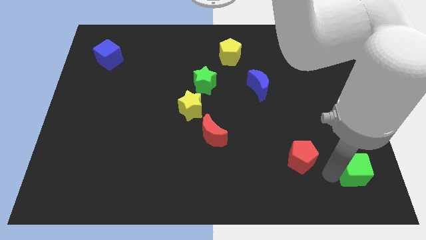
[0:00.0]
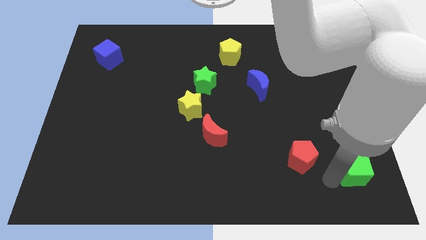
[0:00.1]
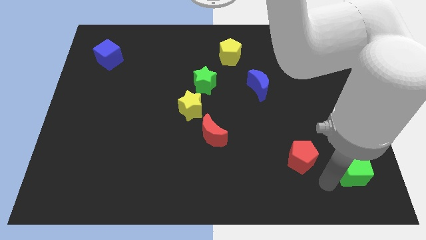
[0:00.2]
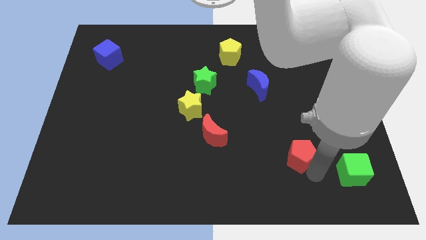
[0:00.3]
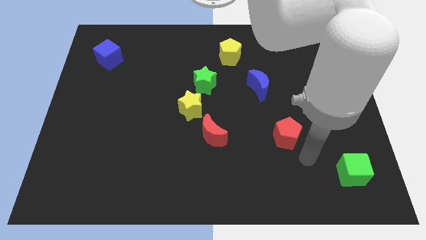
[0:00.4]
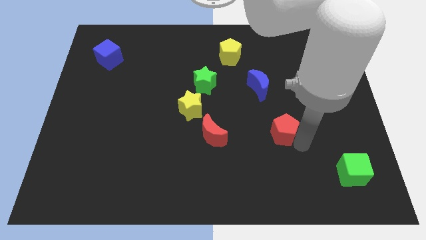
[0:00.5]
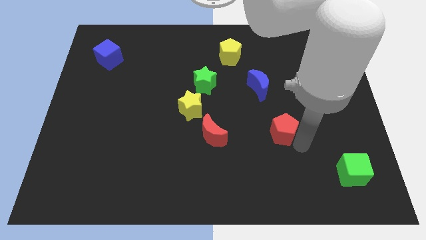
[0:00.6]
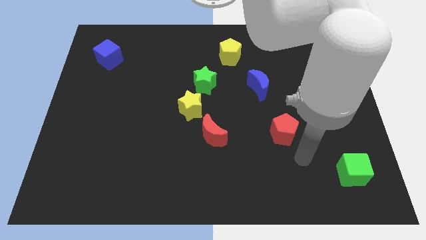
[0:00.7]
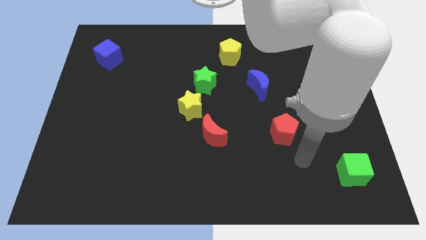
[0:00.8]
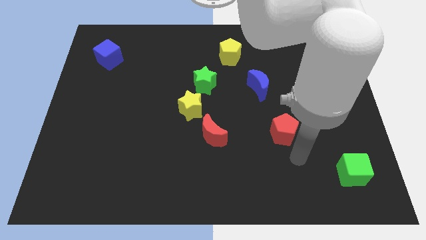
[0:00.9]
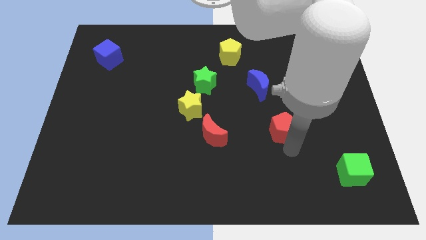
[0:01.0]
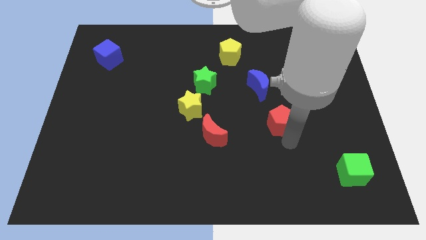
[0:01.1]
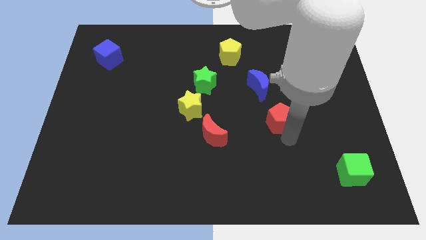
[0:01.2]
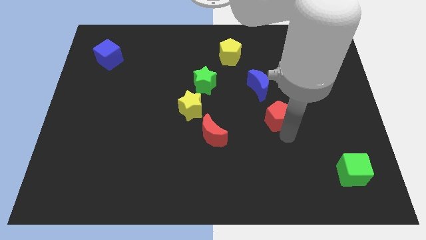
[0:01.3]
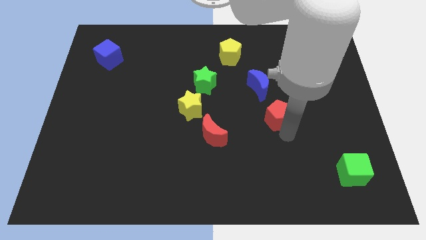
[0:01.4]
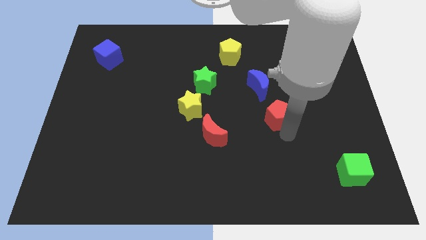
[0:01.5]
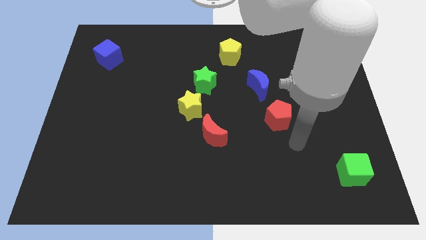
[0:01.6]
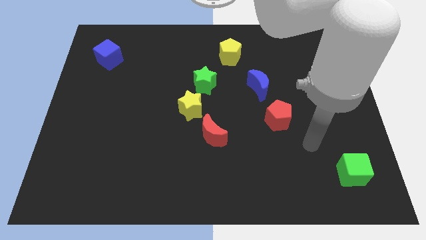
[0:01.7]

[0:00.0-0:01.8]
place the red pentagon diagonal to the blue moon

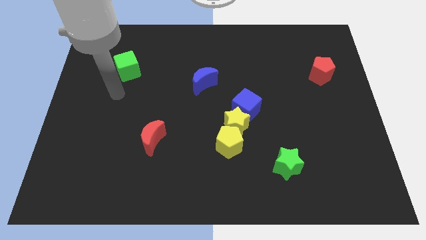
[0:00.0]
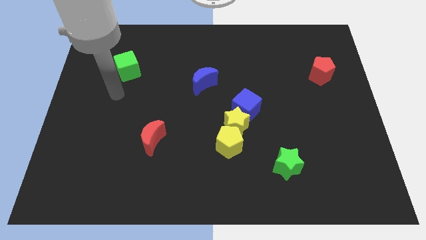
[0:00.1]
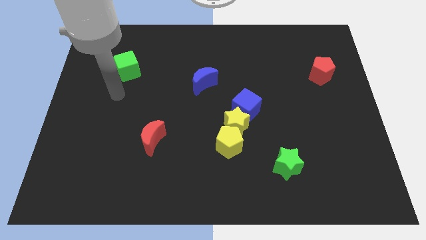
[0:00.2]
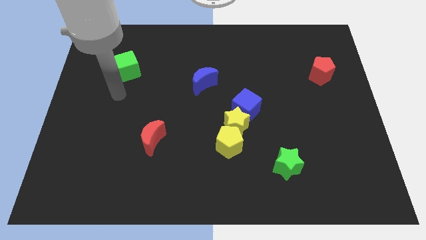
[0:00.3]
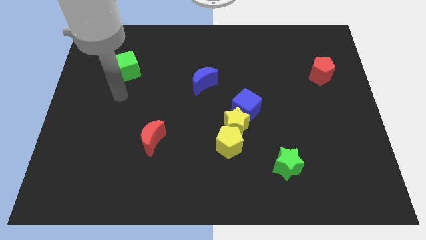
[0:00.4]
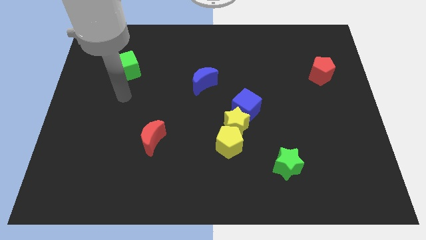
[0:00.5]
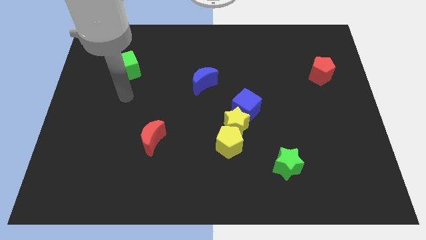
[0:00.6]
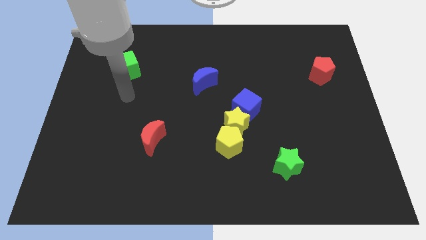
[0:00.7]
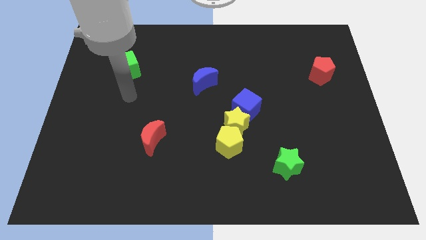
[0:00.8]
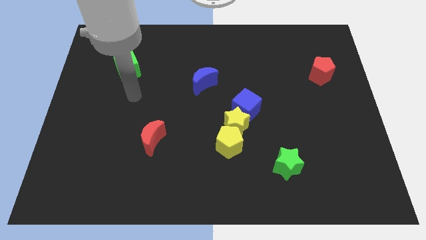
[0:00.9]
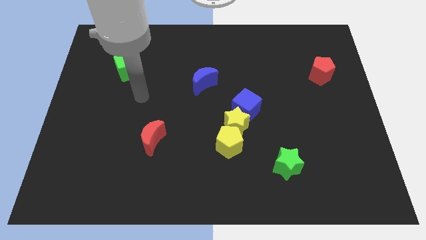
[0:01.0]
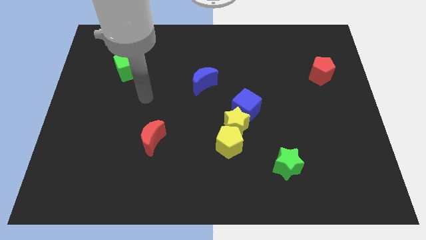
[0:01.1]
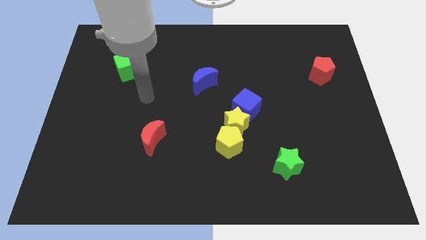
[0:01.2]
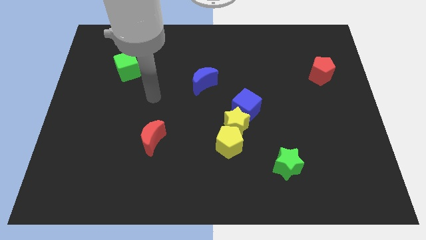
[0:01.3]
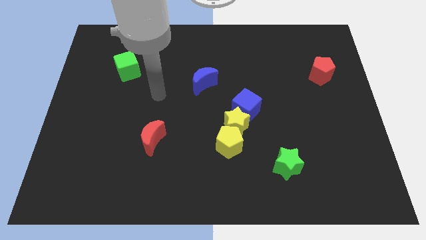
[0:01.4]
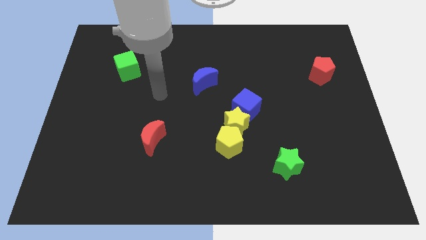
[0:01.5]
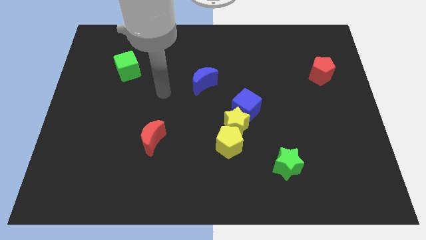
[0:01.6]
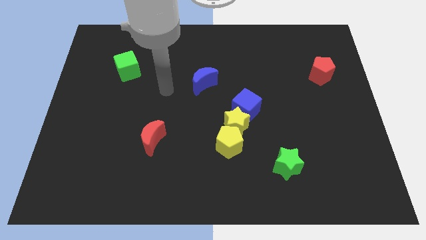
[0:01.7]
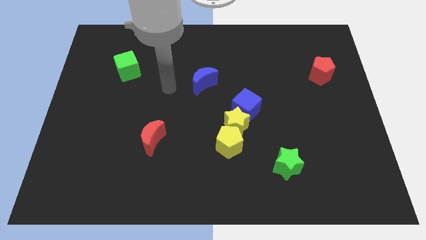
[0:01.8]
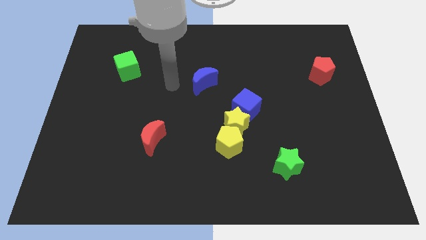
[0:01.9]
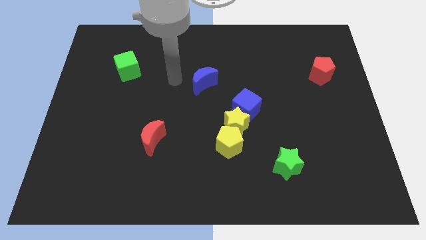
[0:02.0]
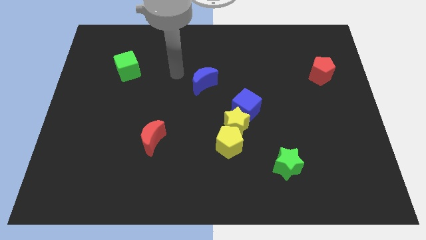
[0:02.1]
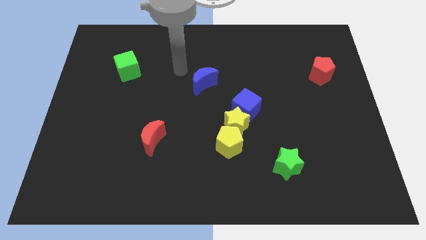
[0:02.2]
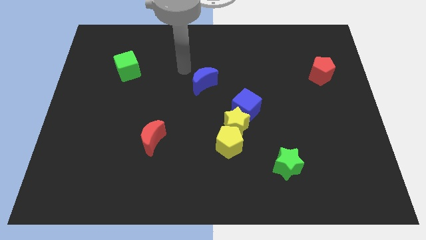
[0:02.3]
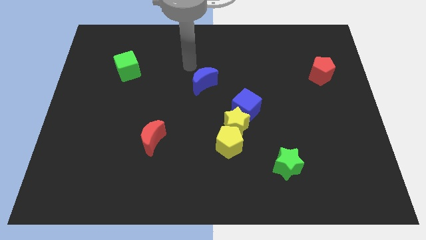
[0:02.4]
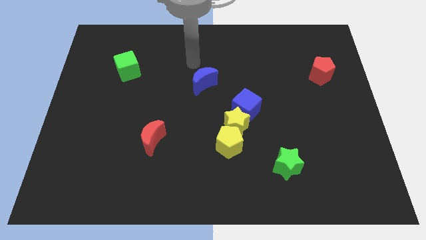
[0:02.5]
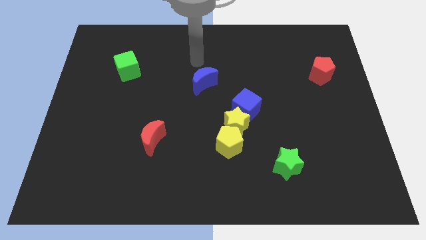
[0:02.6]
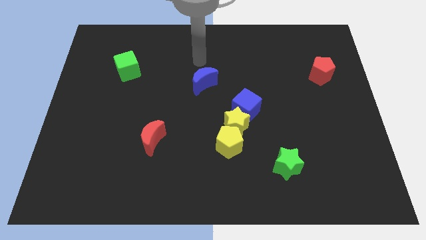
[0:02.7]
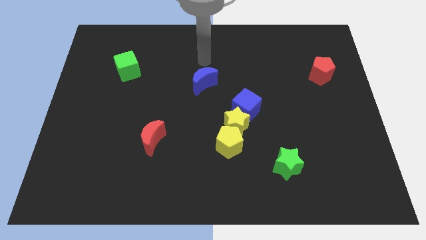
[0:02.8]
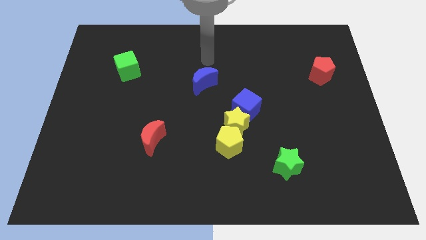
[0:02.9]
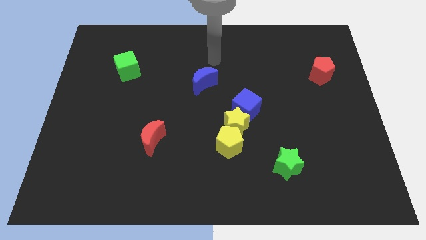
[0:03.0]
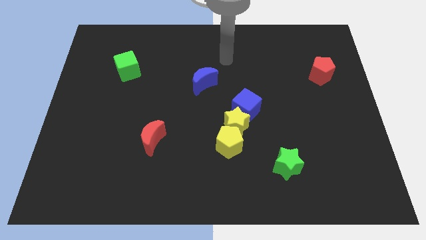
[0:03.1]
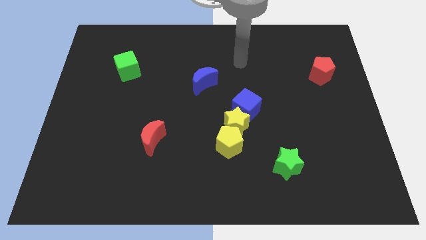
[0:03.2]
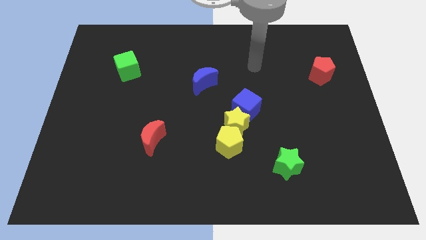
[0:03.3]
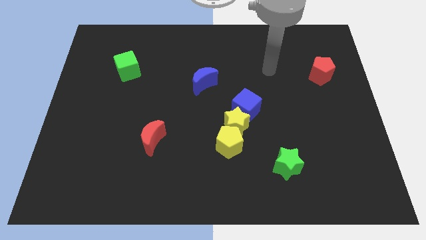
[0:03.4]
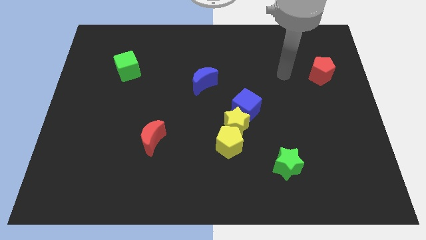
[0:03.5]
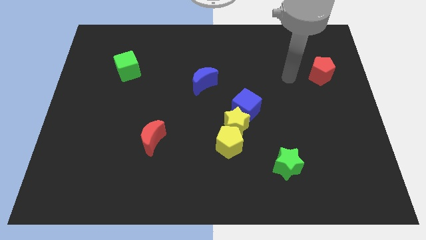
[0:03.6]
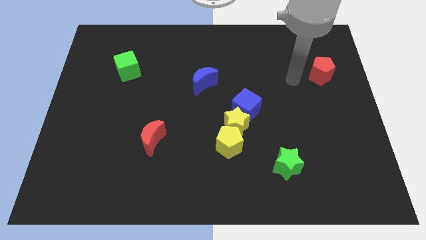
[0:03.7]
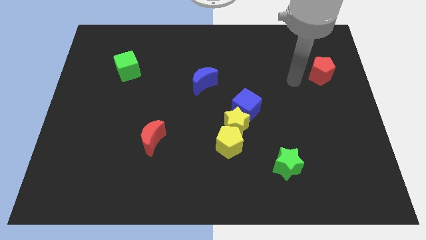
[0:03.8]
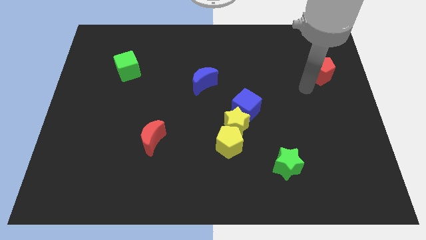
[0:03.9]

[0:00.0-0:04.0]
move your arm close to the red pentagon

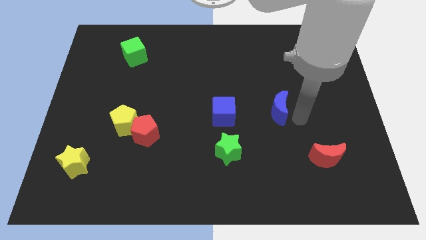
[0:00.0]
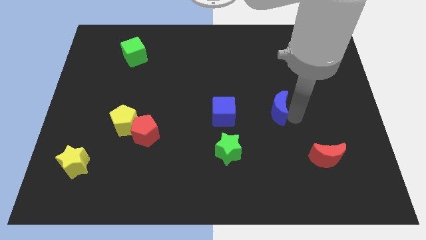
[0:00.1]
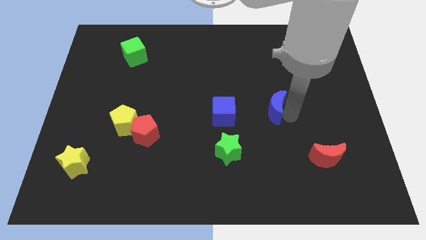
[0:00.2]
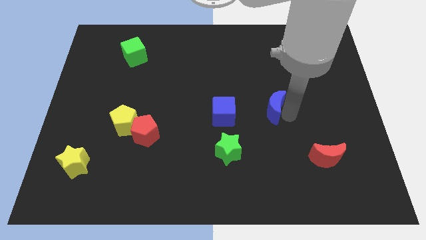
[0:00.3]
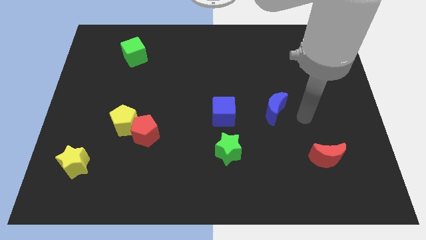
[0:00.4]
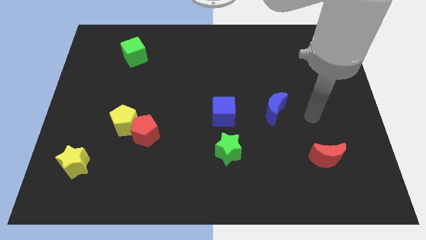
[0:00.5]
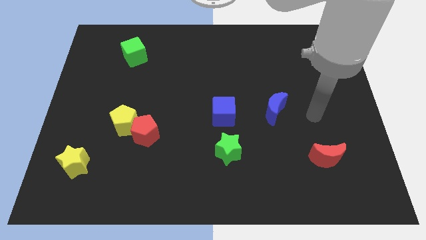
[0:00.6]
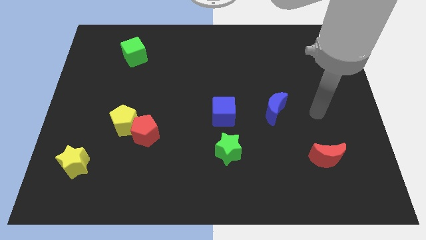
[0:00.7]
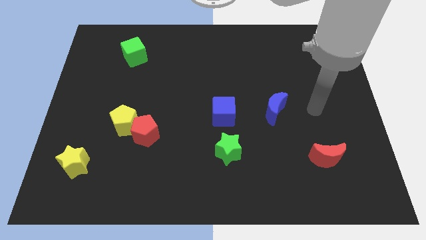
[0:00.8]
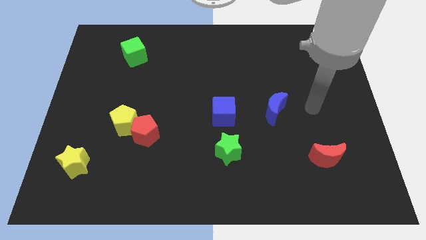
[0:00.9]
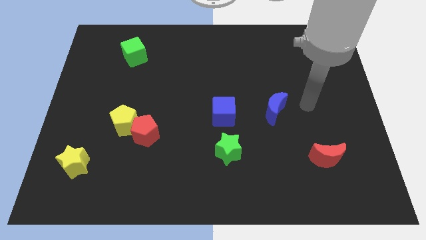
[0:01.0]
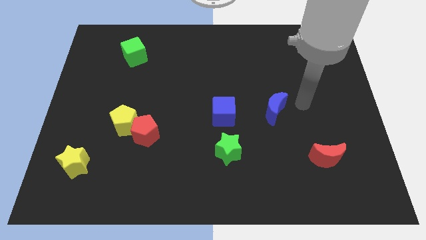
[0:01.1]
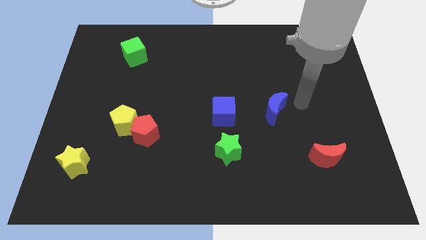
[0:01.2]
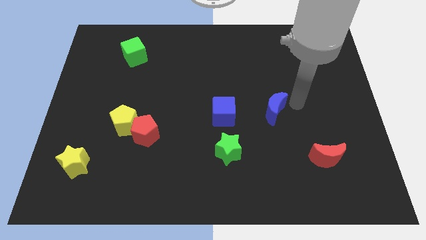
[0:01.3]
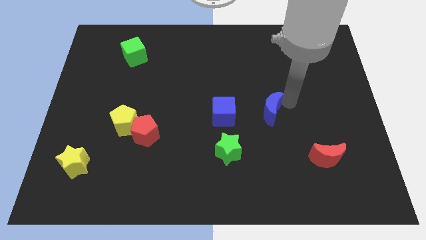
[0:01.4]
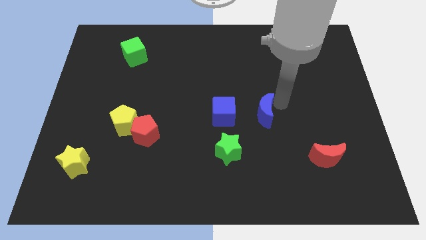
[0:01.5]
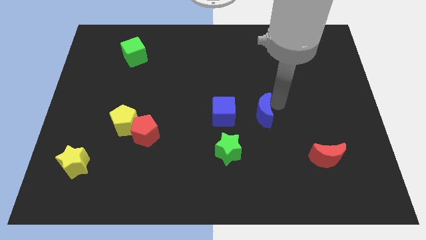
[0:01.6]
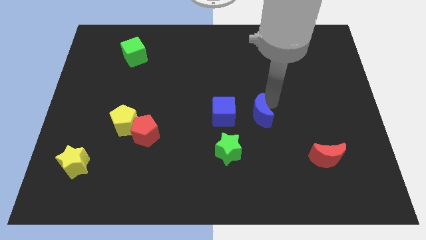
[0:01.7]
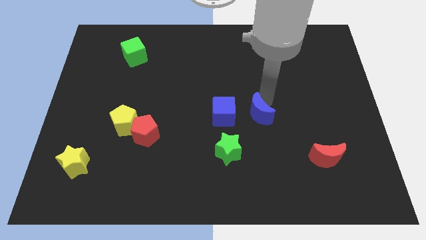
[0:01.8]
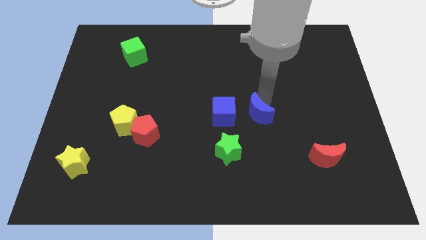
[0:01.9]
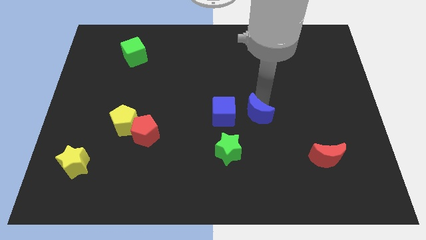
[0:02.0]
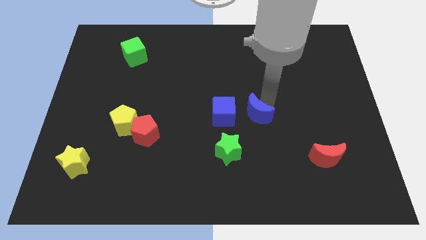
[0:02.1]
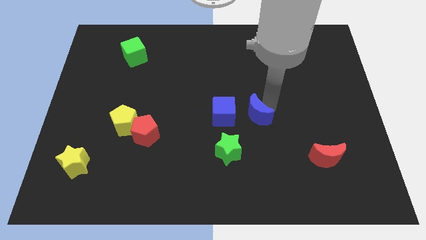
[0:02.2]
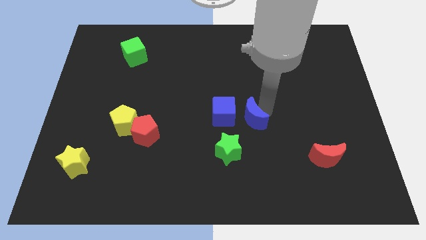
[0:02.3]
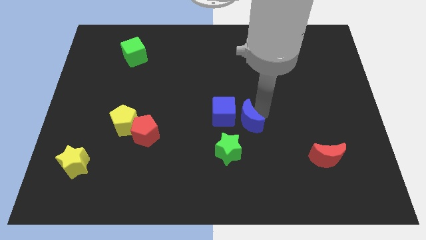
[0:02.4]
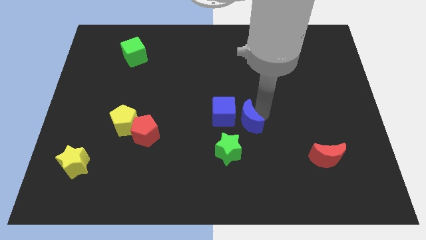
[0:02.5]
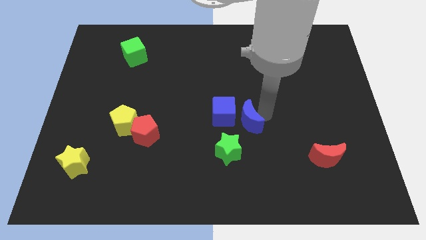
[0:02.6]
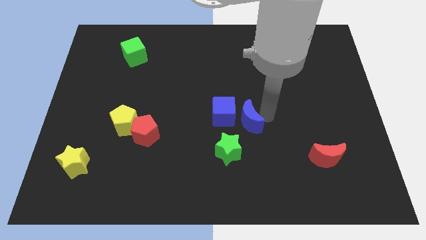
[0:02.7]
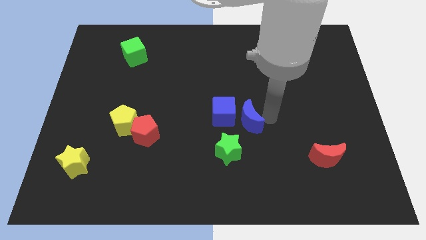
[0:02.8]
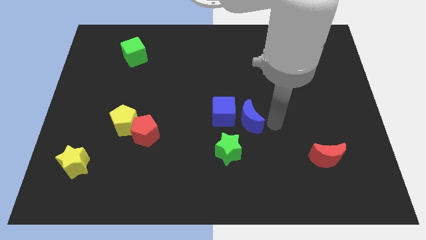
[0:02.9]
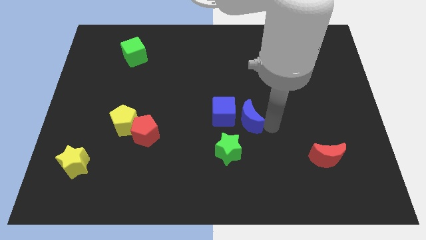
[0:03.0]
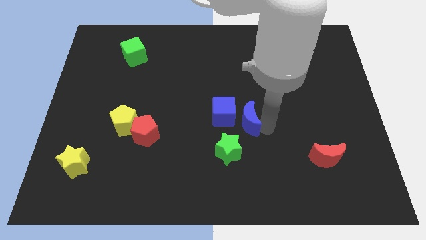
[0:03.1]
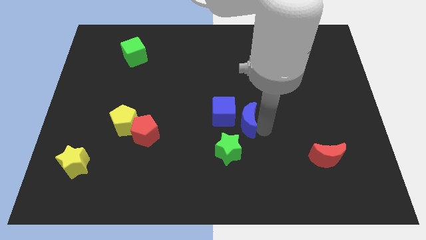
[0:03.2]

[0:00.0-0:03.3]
place the blue moon to the right side of the blue cube
